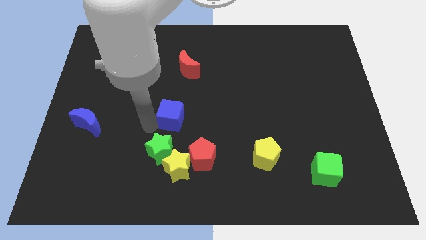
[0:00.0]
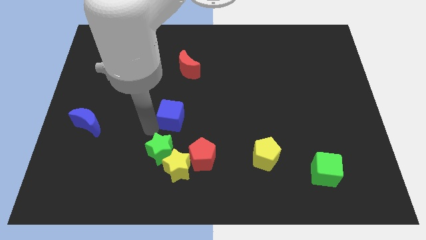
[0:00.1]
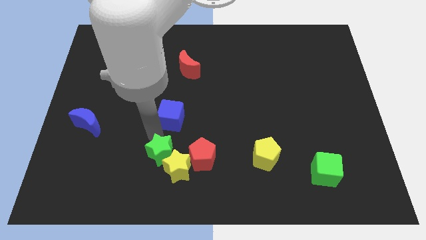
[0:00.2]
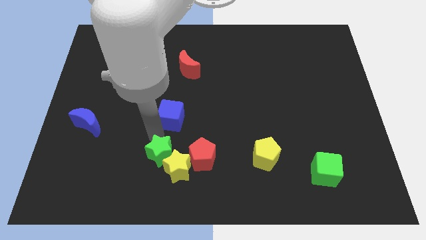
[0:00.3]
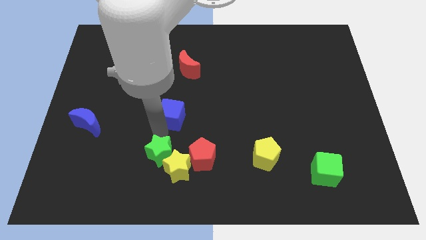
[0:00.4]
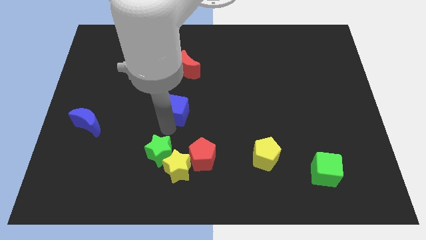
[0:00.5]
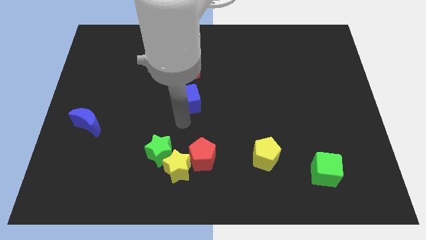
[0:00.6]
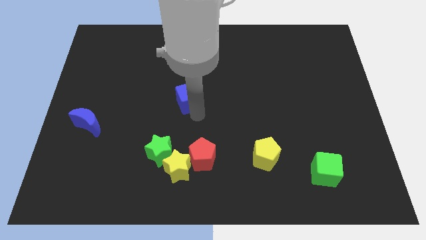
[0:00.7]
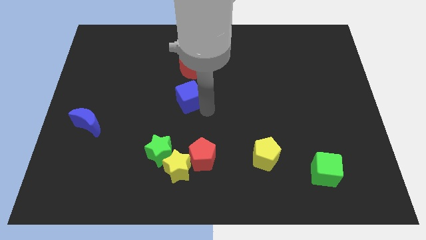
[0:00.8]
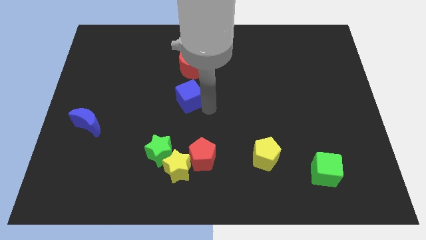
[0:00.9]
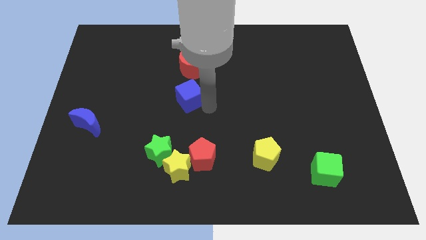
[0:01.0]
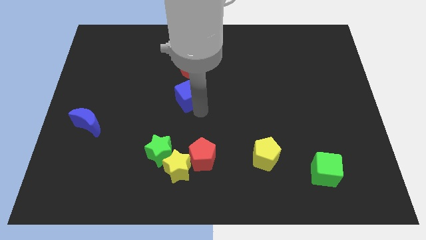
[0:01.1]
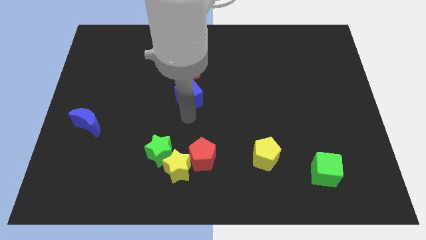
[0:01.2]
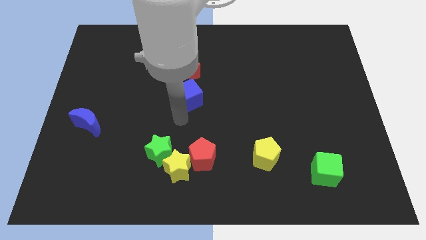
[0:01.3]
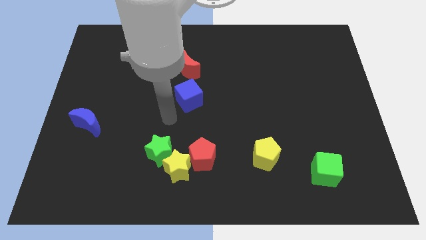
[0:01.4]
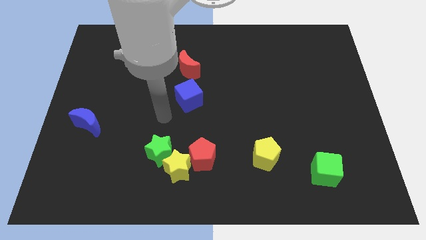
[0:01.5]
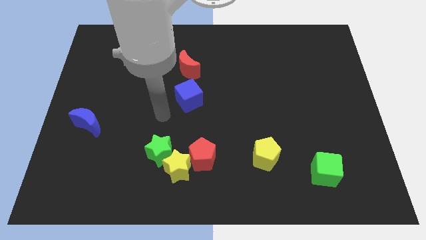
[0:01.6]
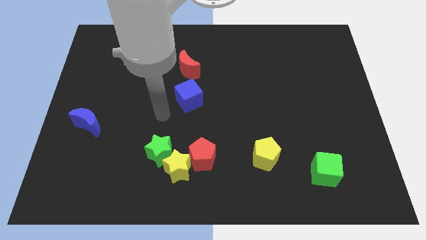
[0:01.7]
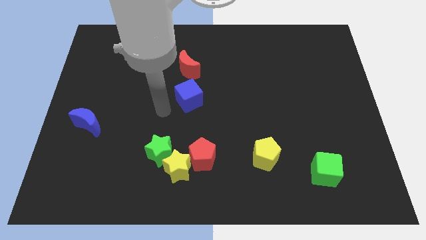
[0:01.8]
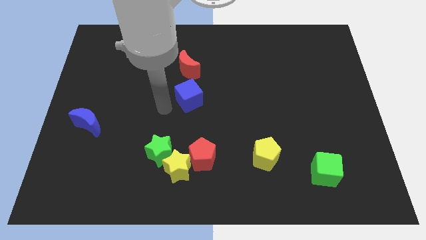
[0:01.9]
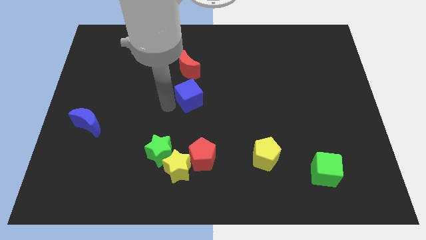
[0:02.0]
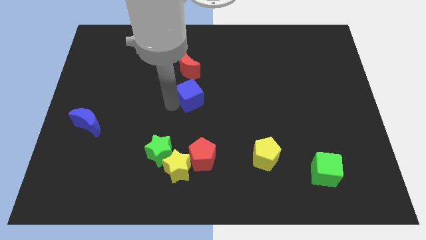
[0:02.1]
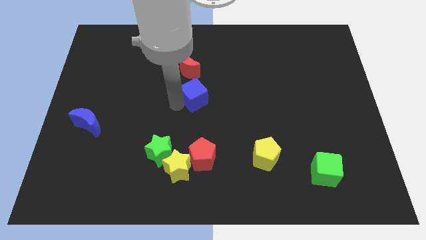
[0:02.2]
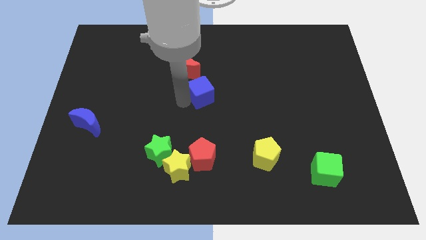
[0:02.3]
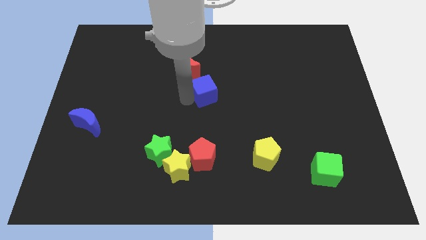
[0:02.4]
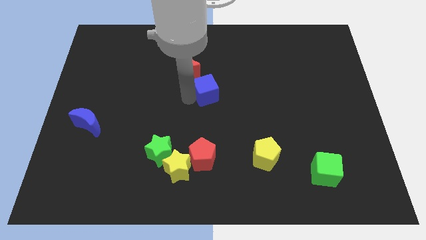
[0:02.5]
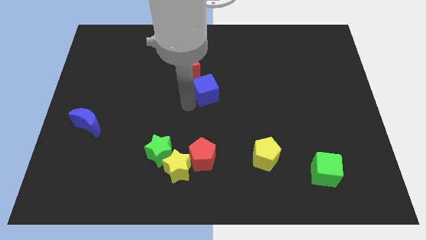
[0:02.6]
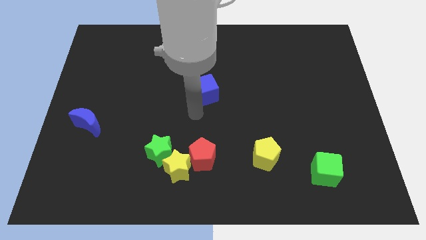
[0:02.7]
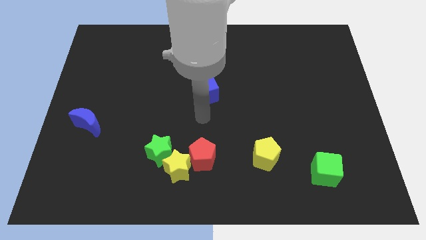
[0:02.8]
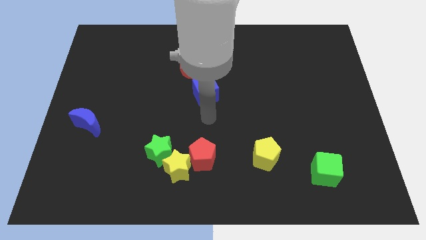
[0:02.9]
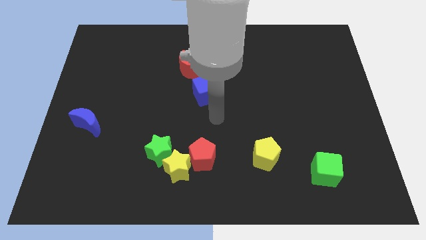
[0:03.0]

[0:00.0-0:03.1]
place the blue cube in a diagonal form

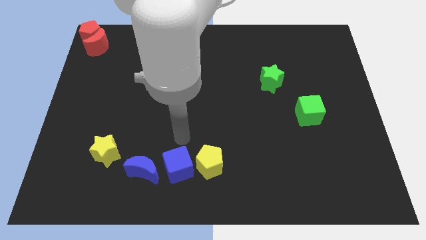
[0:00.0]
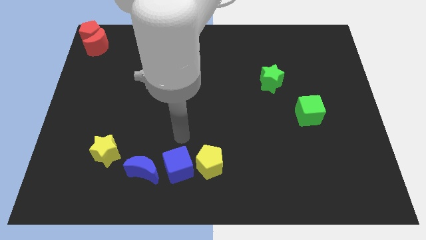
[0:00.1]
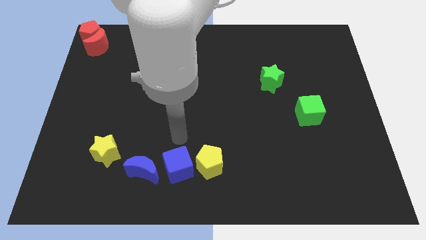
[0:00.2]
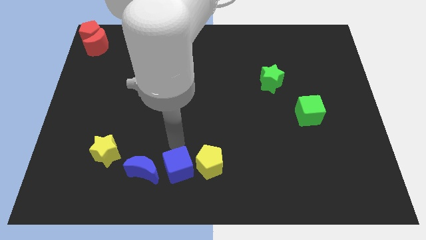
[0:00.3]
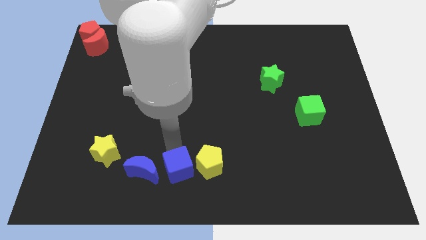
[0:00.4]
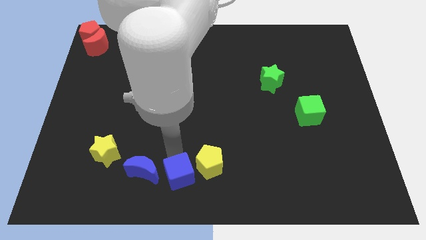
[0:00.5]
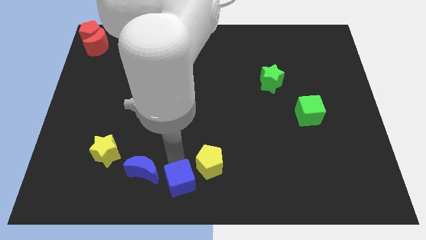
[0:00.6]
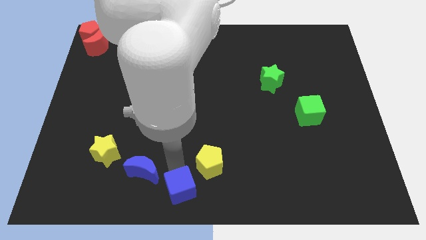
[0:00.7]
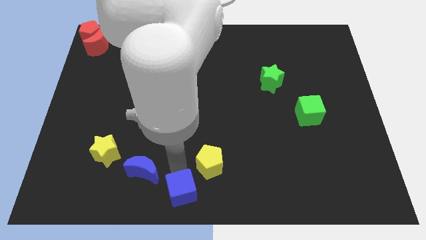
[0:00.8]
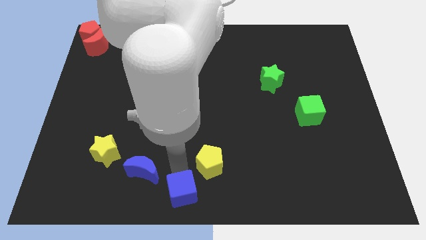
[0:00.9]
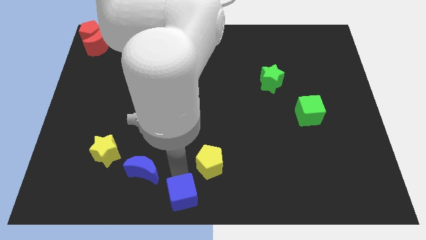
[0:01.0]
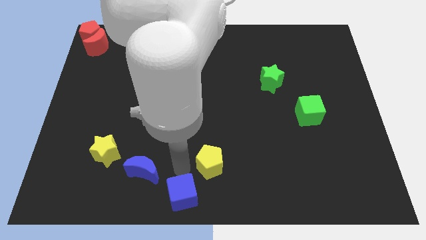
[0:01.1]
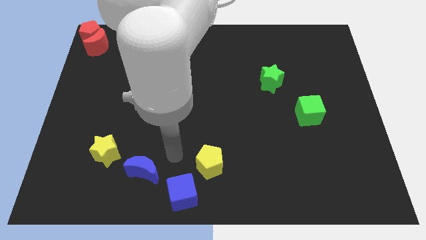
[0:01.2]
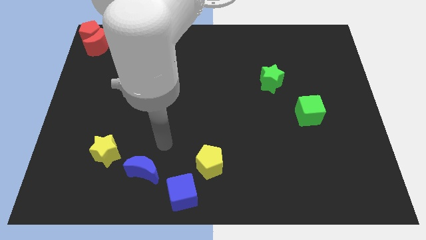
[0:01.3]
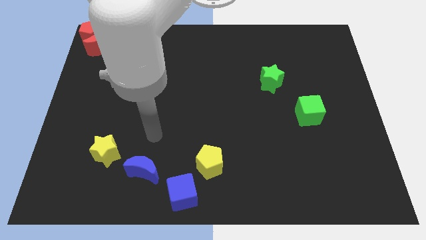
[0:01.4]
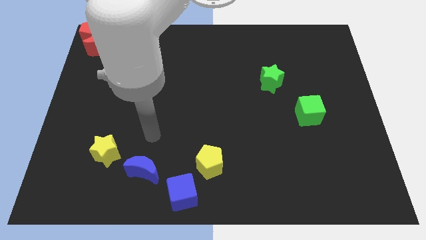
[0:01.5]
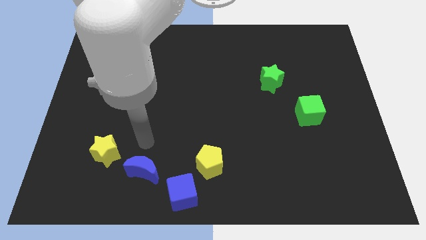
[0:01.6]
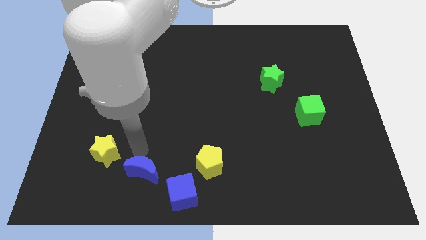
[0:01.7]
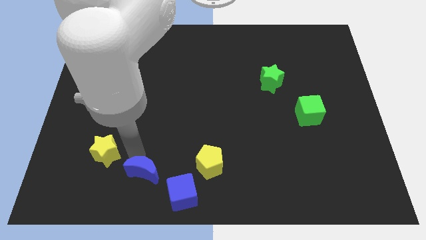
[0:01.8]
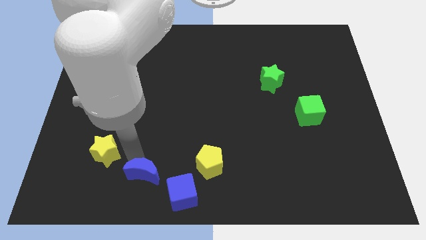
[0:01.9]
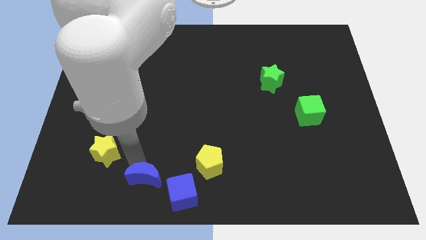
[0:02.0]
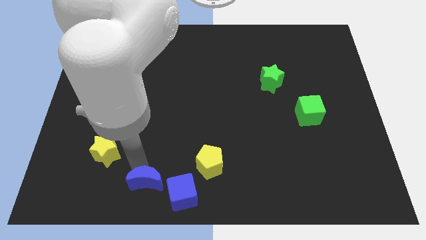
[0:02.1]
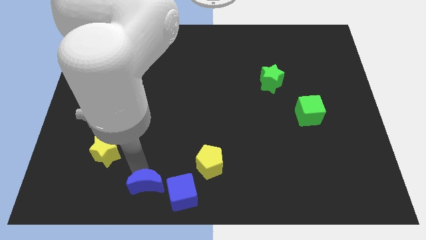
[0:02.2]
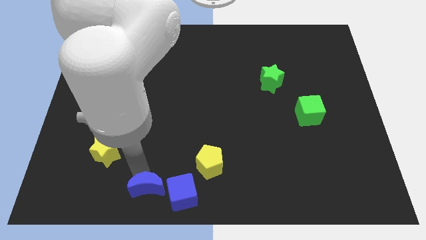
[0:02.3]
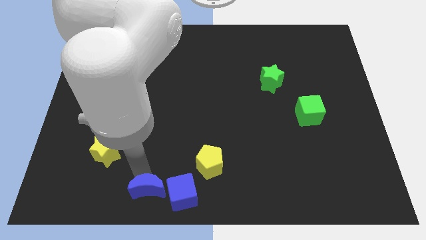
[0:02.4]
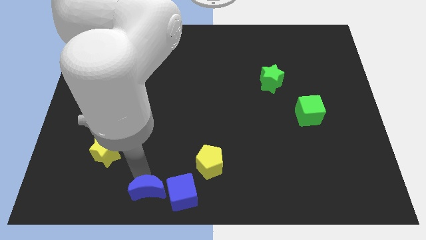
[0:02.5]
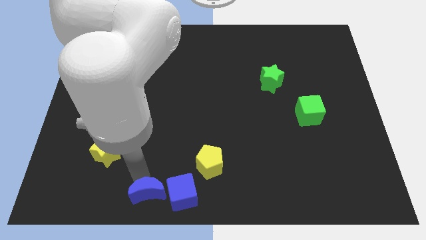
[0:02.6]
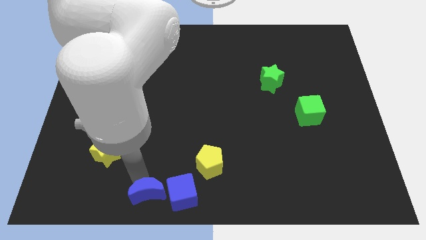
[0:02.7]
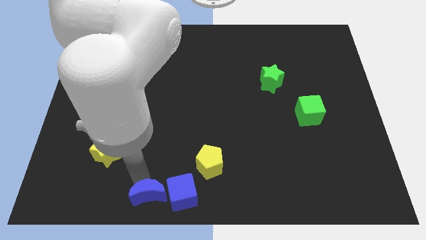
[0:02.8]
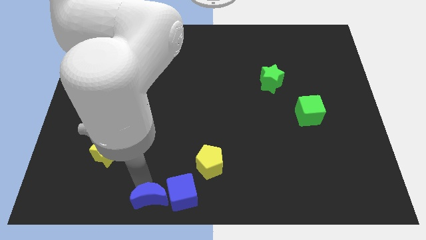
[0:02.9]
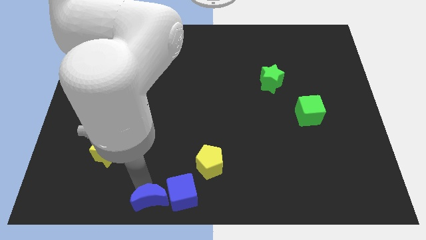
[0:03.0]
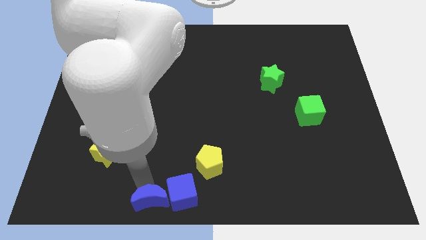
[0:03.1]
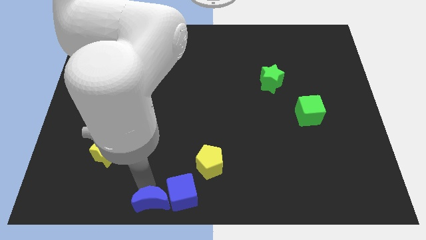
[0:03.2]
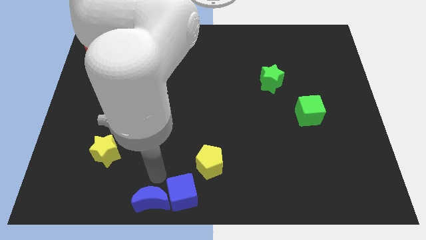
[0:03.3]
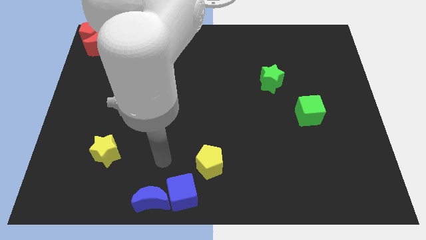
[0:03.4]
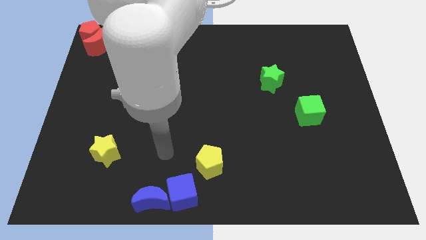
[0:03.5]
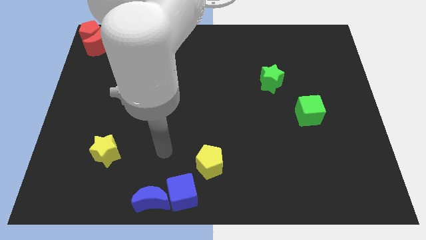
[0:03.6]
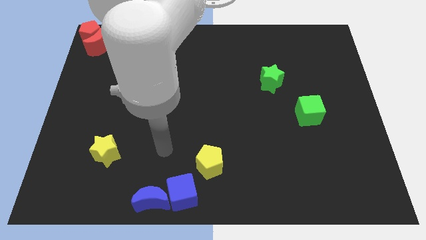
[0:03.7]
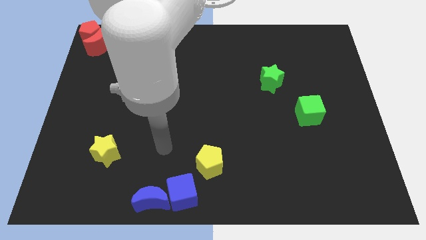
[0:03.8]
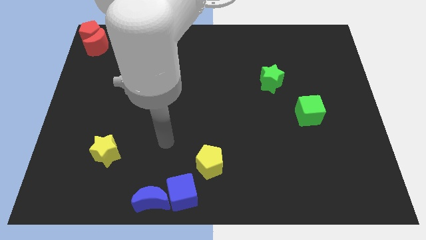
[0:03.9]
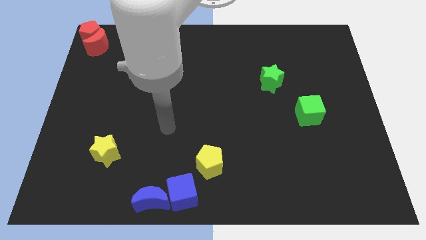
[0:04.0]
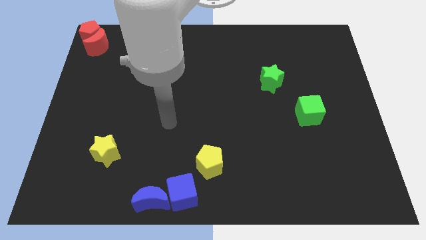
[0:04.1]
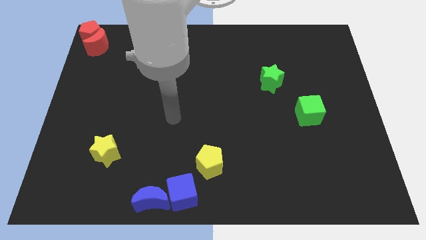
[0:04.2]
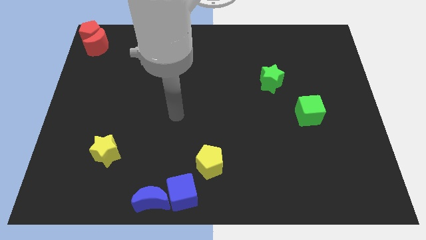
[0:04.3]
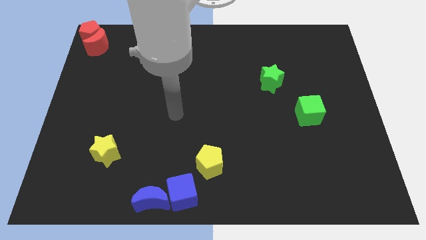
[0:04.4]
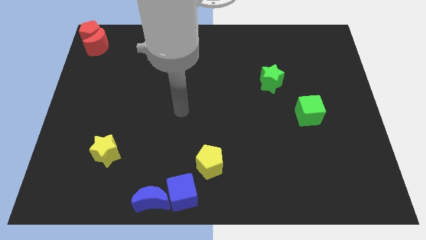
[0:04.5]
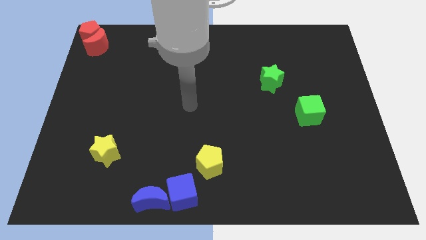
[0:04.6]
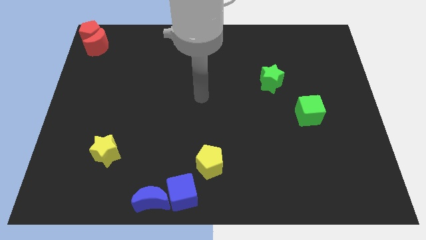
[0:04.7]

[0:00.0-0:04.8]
push the blue blocks to the bottom side

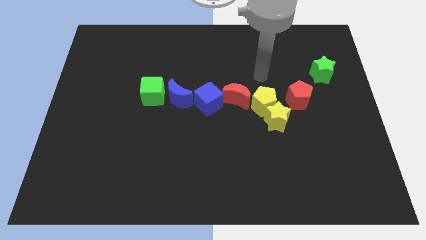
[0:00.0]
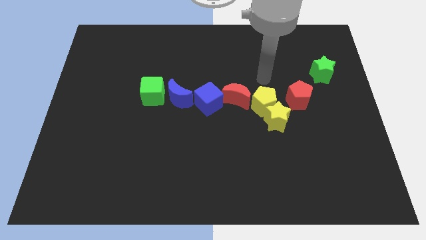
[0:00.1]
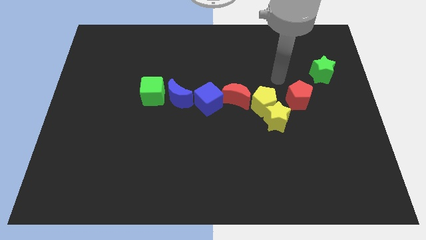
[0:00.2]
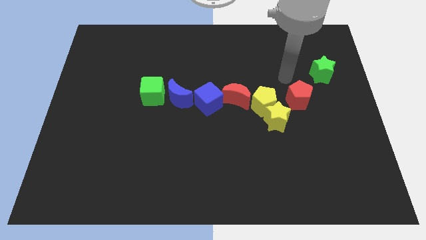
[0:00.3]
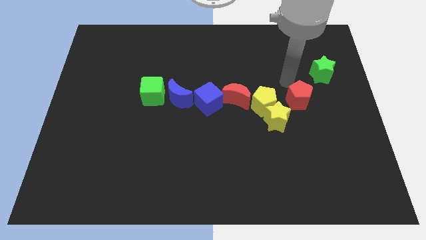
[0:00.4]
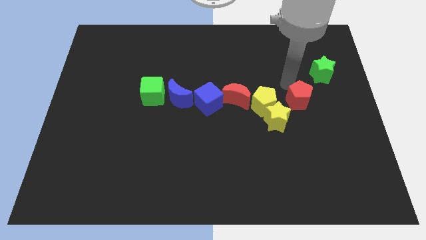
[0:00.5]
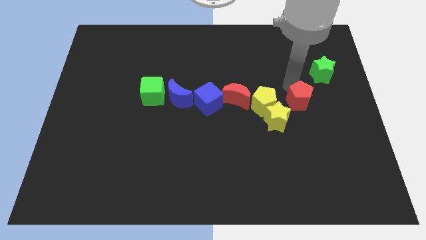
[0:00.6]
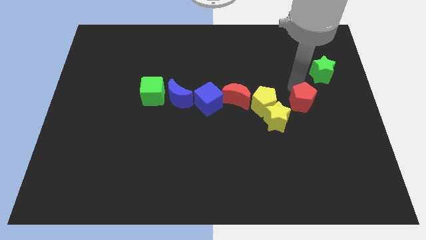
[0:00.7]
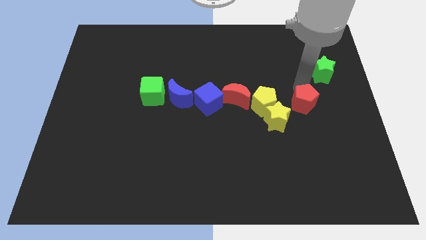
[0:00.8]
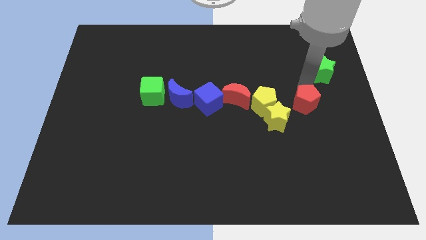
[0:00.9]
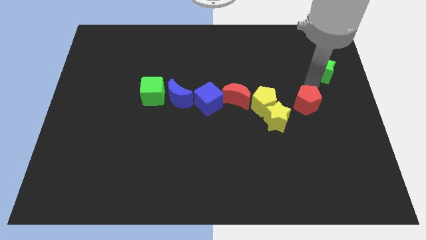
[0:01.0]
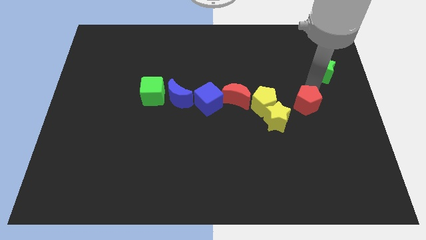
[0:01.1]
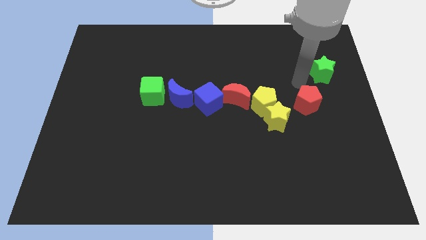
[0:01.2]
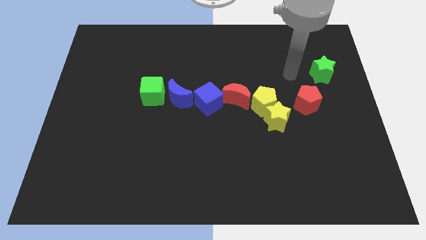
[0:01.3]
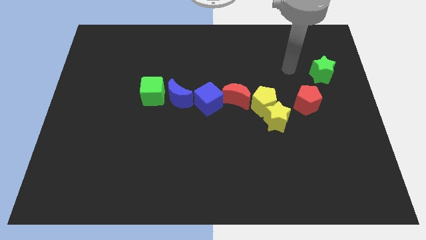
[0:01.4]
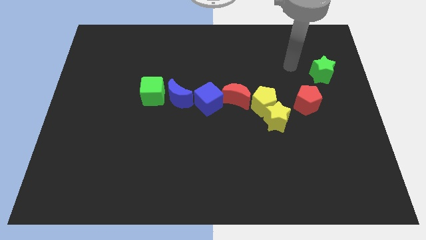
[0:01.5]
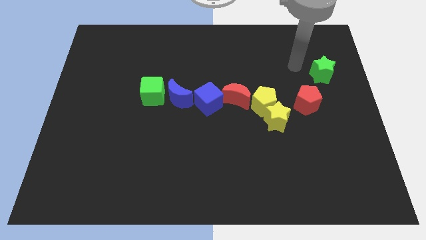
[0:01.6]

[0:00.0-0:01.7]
slightly push the red pentagon to the right side of the board
